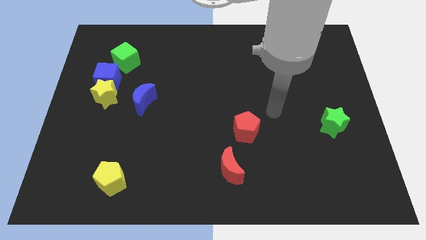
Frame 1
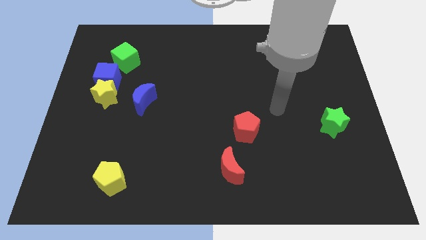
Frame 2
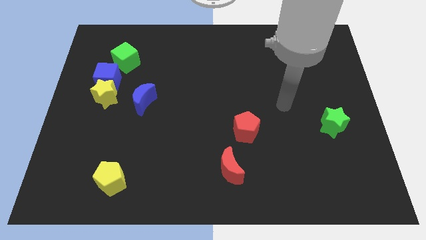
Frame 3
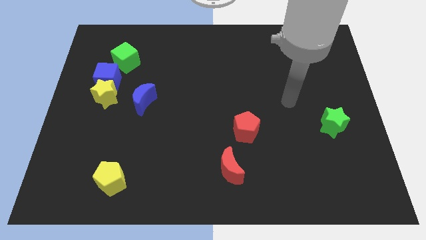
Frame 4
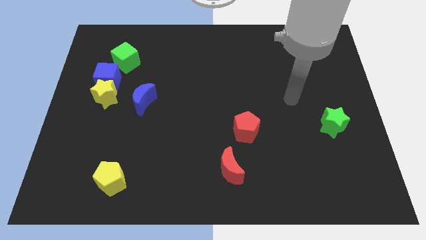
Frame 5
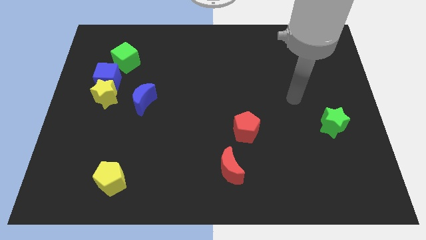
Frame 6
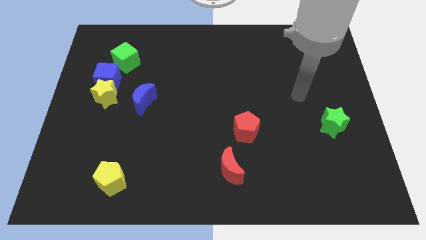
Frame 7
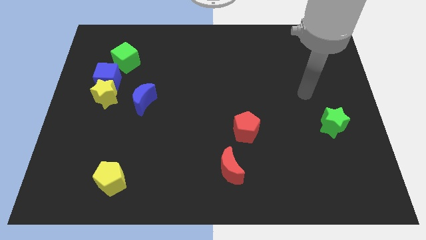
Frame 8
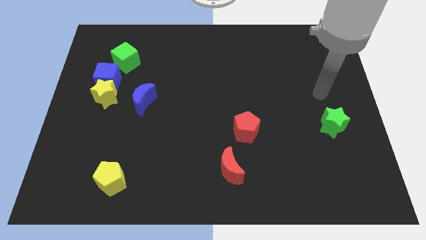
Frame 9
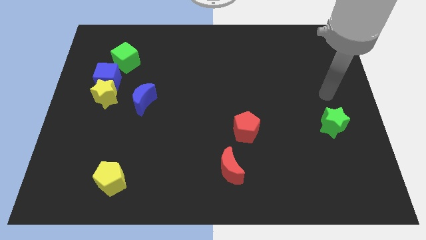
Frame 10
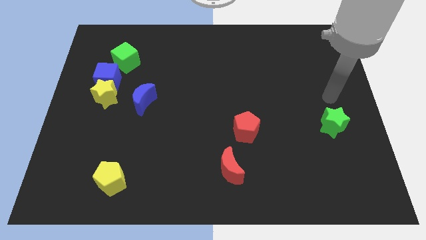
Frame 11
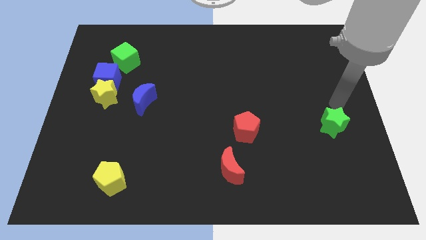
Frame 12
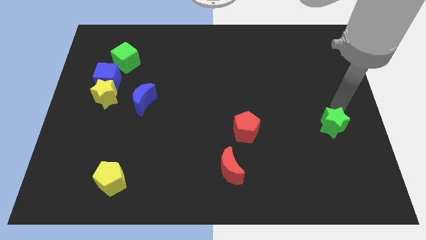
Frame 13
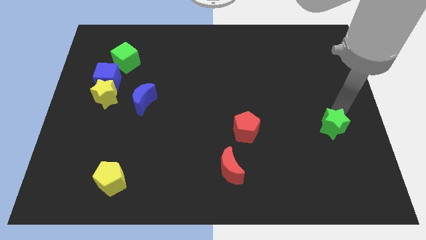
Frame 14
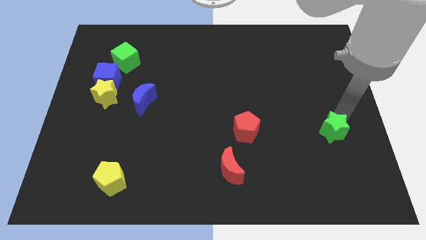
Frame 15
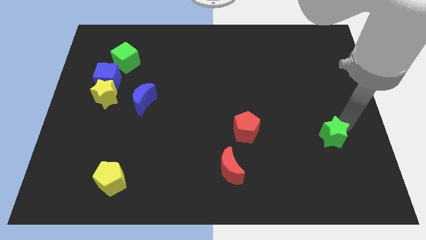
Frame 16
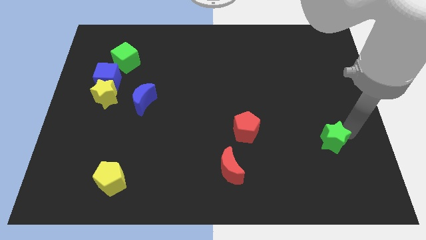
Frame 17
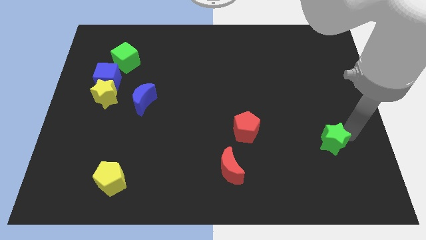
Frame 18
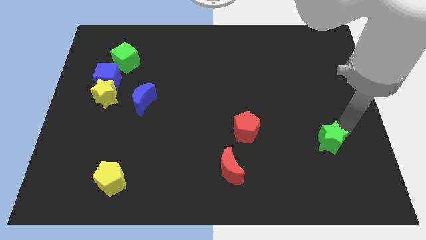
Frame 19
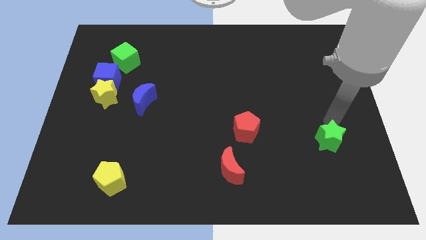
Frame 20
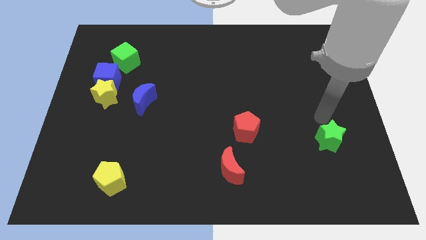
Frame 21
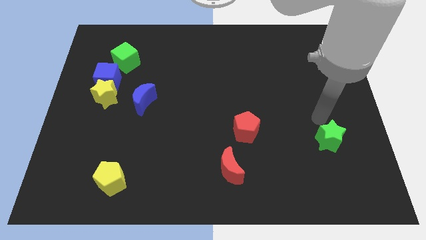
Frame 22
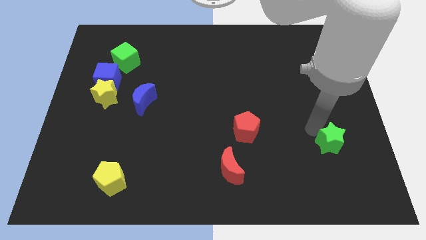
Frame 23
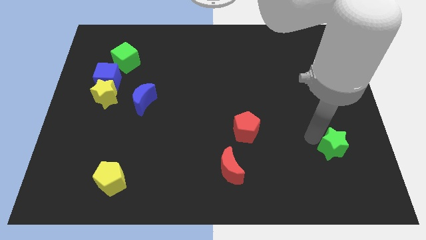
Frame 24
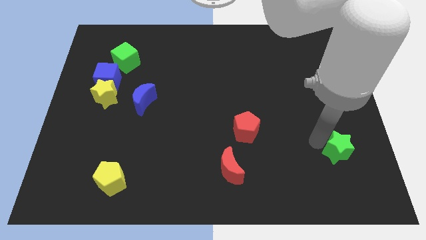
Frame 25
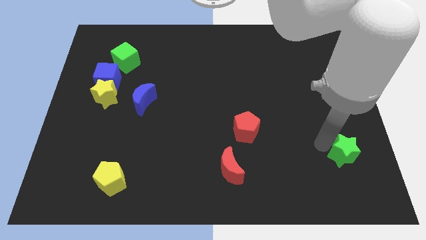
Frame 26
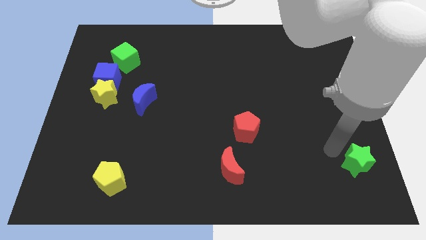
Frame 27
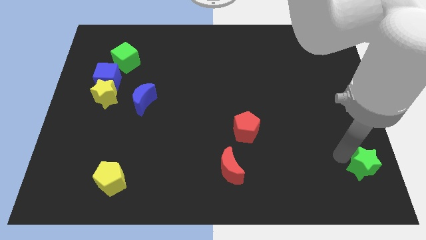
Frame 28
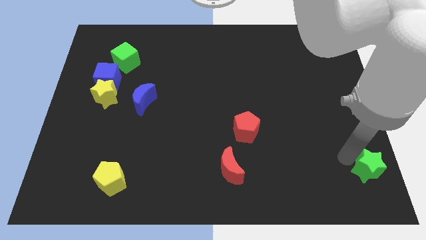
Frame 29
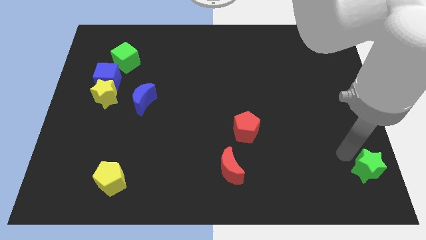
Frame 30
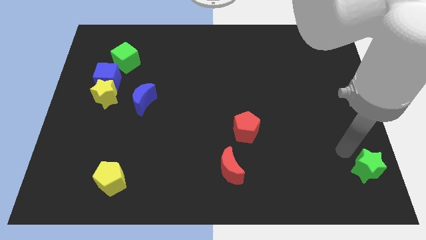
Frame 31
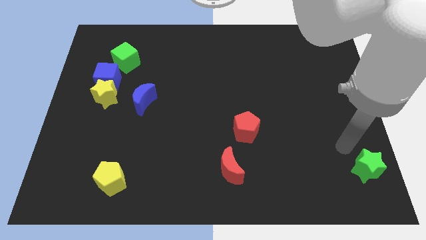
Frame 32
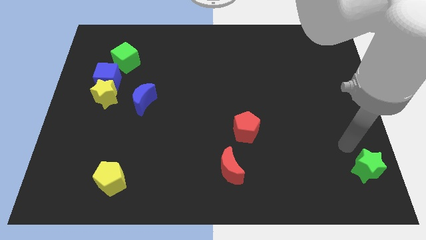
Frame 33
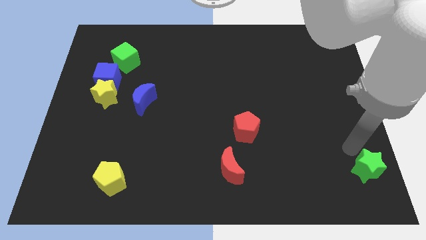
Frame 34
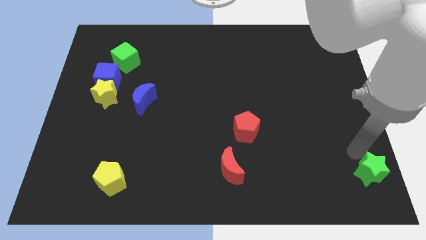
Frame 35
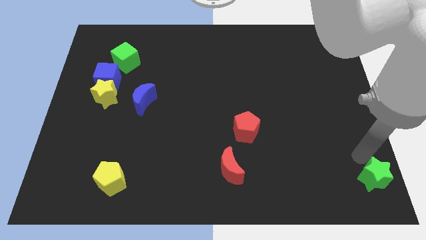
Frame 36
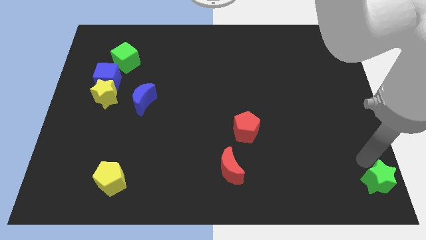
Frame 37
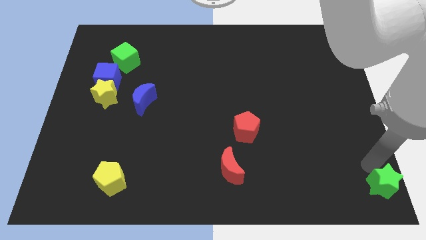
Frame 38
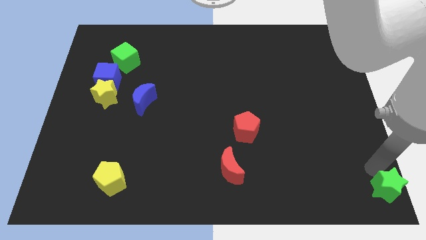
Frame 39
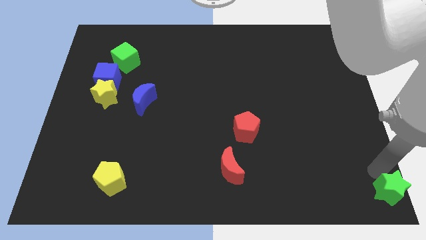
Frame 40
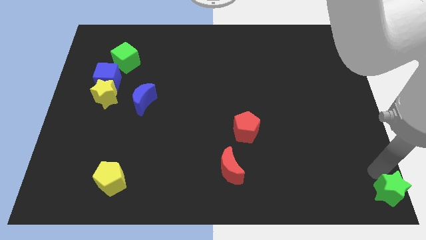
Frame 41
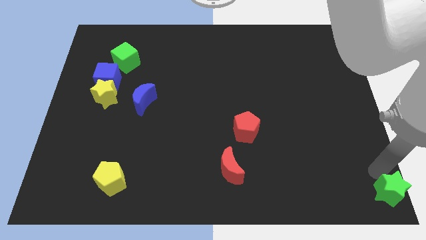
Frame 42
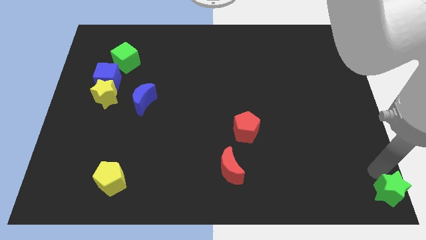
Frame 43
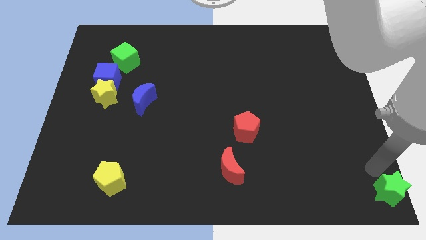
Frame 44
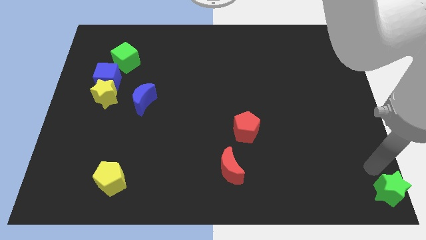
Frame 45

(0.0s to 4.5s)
push the green star to the bottom right corner

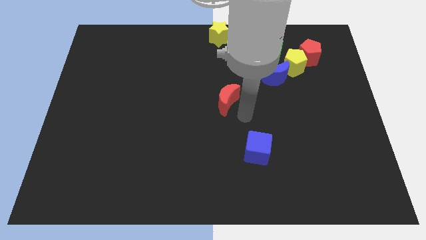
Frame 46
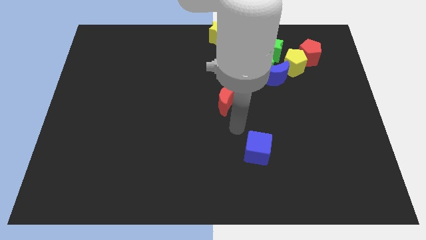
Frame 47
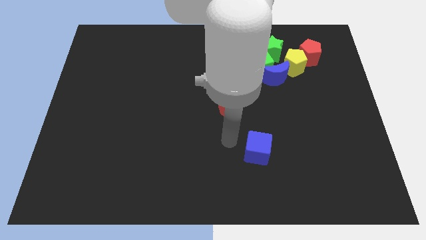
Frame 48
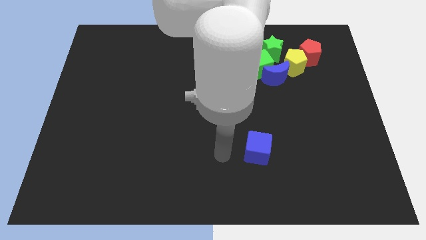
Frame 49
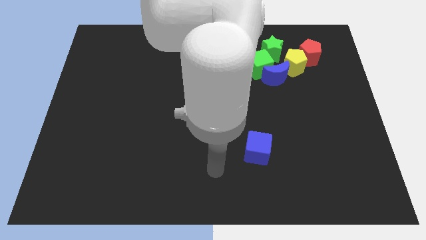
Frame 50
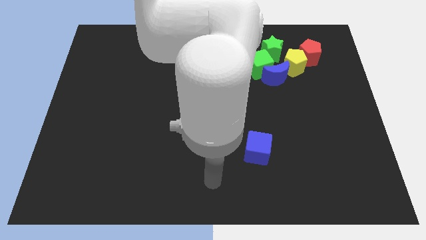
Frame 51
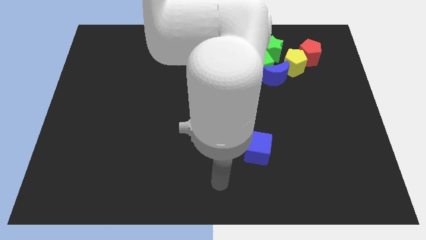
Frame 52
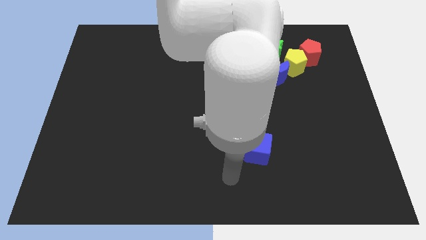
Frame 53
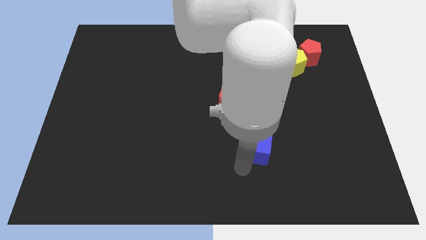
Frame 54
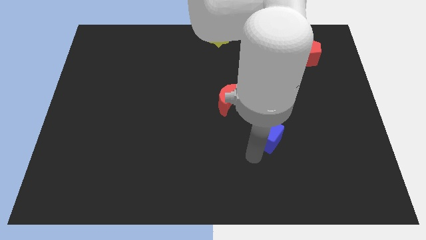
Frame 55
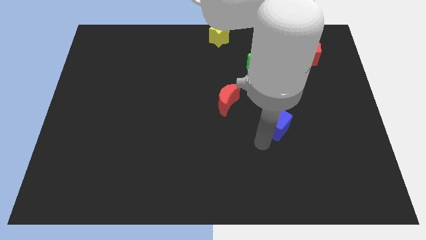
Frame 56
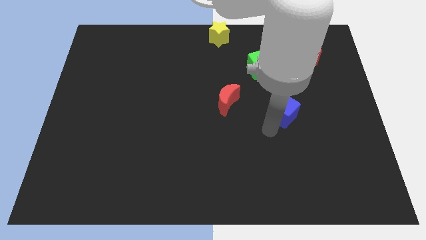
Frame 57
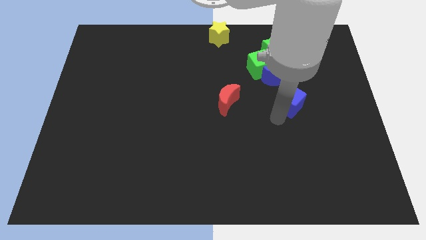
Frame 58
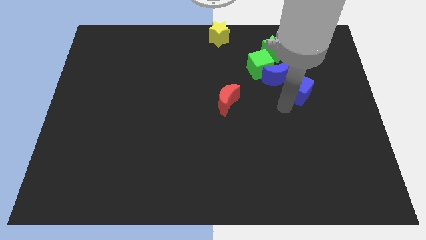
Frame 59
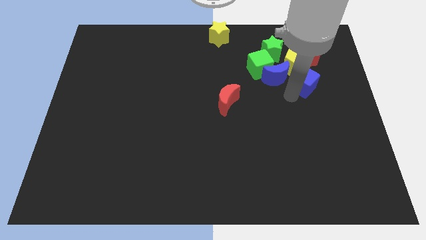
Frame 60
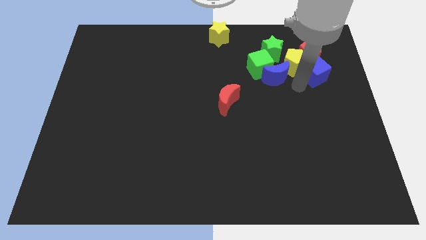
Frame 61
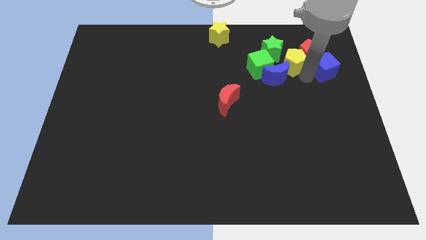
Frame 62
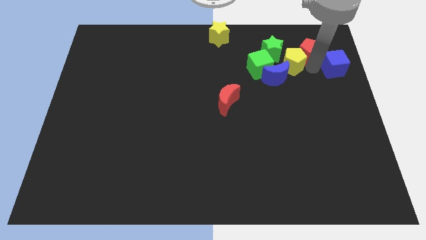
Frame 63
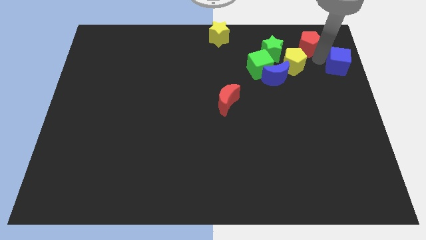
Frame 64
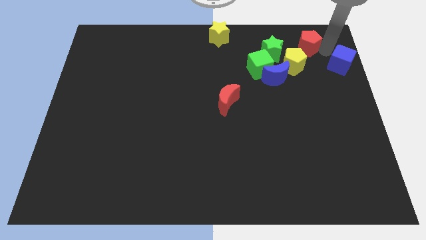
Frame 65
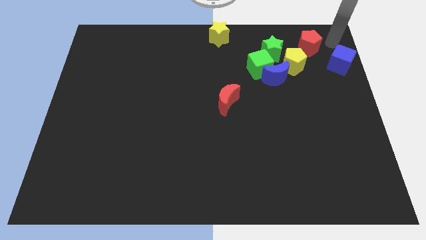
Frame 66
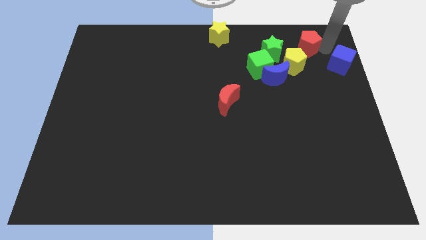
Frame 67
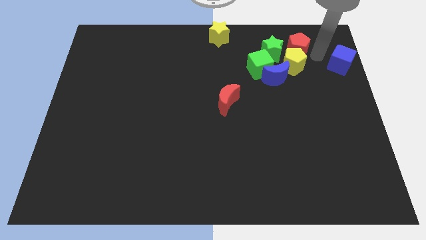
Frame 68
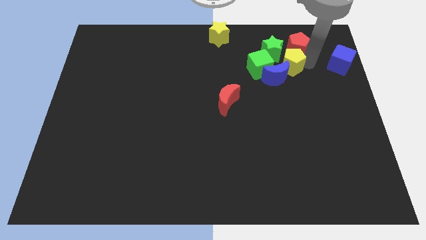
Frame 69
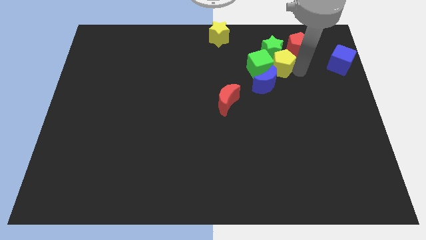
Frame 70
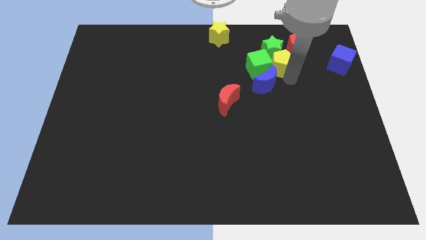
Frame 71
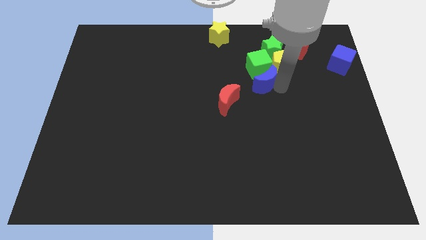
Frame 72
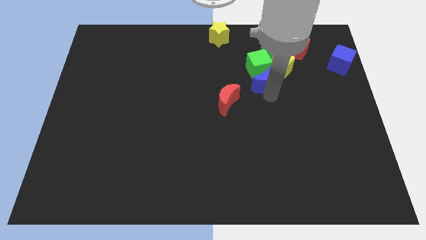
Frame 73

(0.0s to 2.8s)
place blue cube to the top right corner of the board

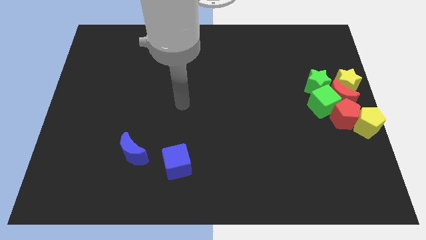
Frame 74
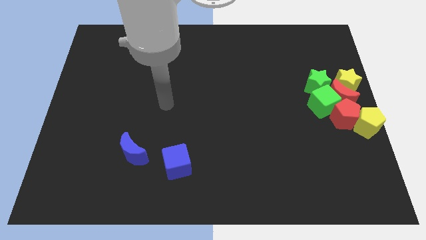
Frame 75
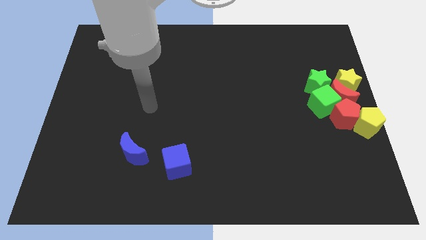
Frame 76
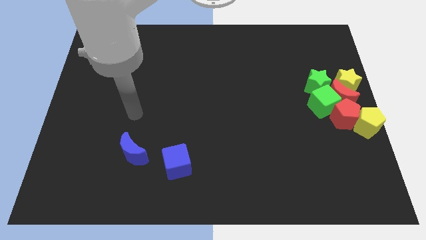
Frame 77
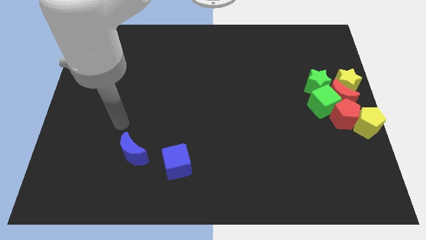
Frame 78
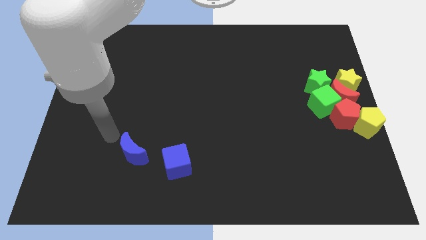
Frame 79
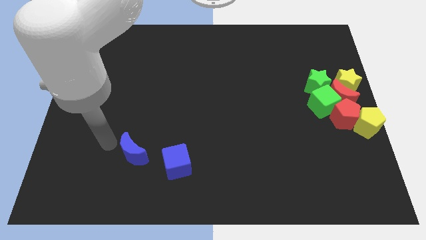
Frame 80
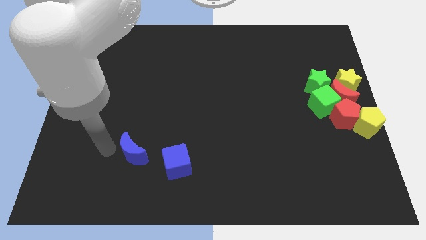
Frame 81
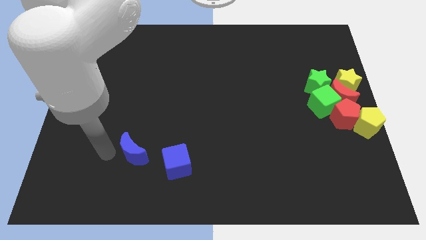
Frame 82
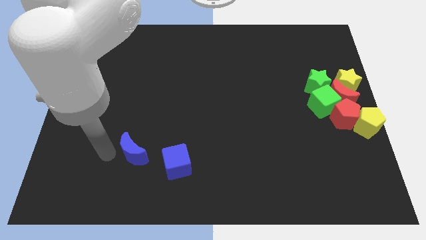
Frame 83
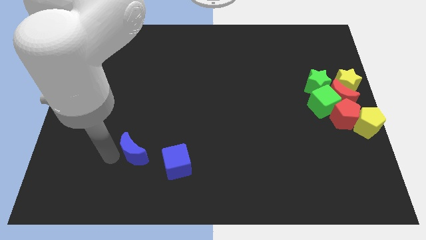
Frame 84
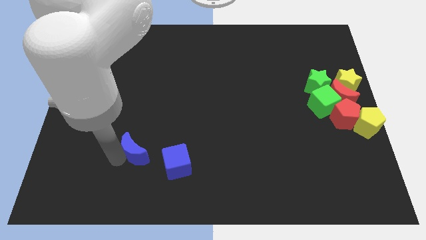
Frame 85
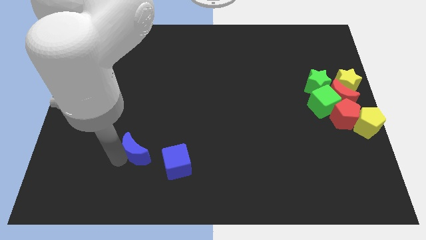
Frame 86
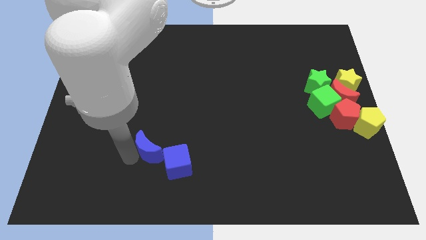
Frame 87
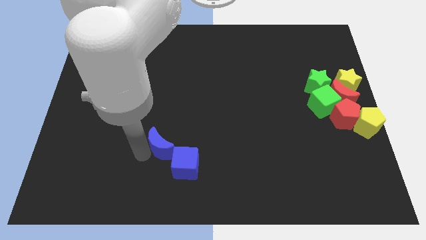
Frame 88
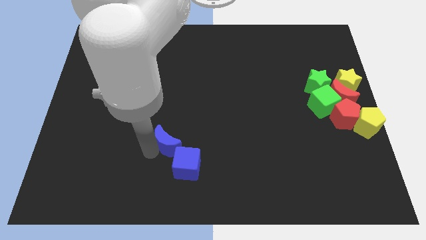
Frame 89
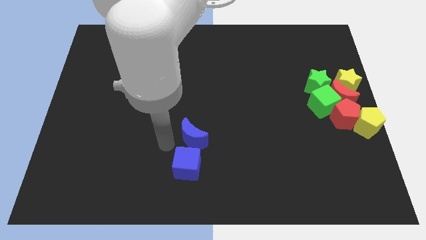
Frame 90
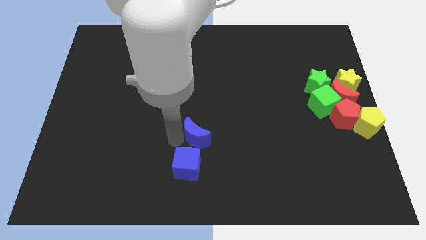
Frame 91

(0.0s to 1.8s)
move blue moon above the blue cube
